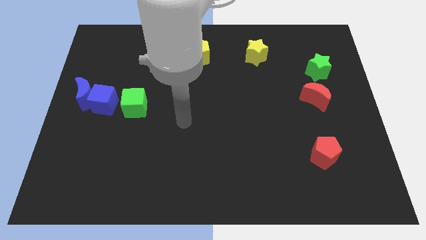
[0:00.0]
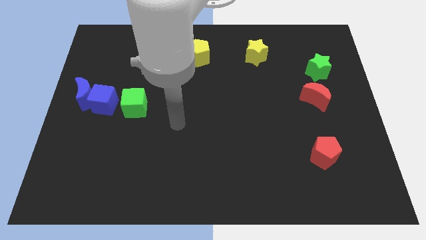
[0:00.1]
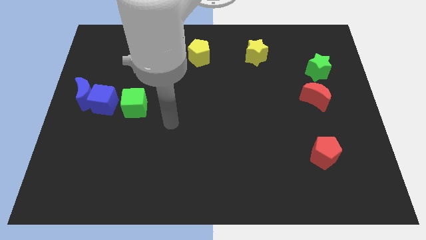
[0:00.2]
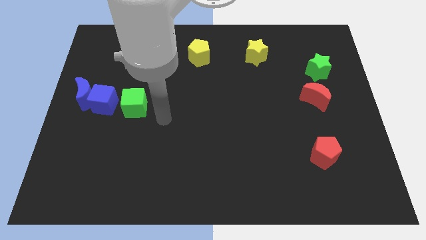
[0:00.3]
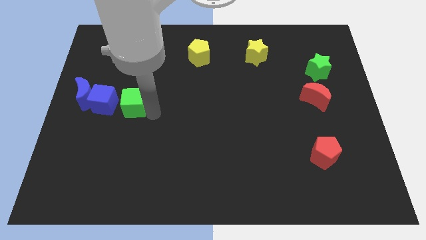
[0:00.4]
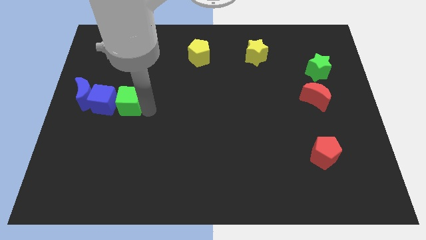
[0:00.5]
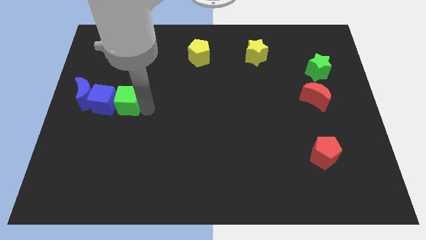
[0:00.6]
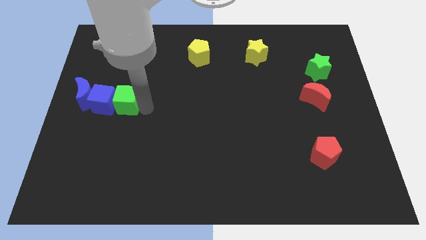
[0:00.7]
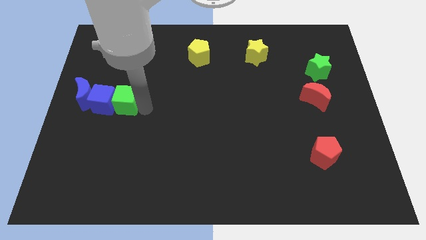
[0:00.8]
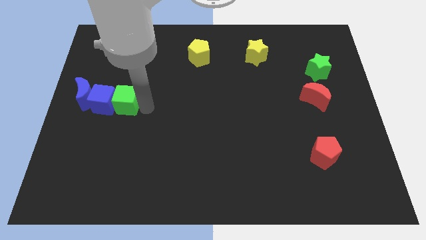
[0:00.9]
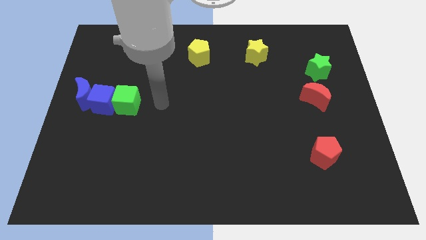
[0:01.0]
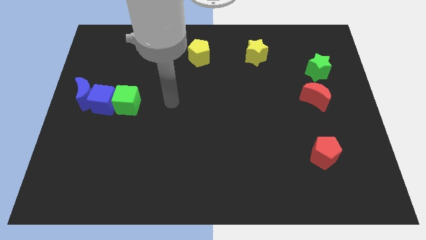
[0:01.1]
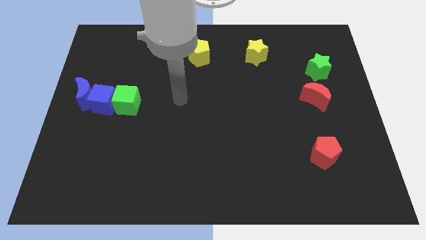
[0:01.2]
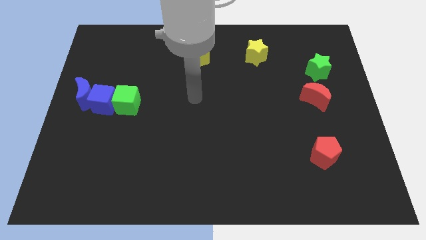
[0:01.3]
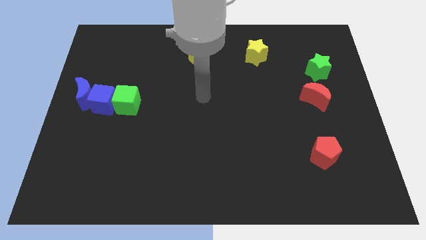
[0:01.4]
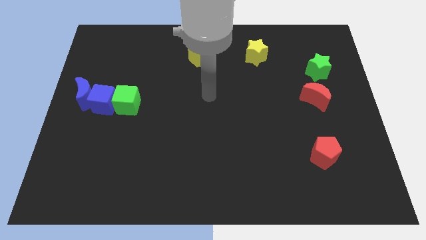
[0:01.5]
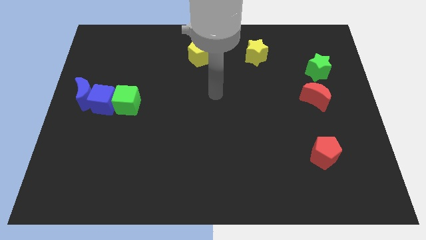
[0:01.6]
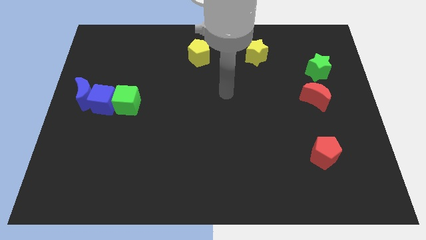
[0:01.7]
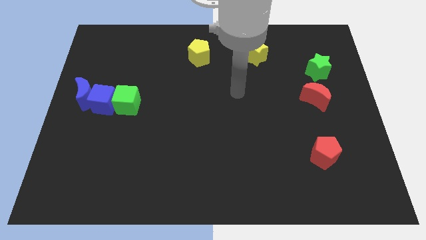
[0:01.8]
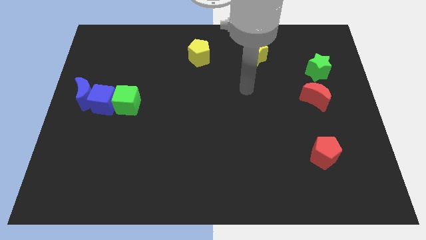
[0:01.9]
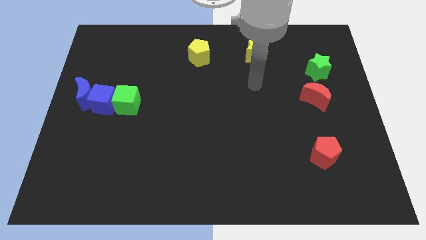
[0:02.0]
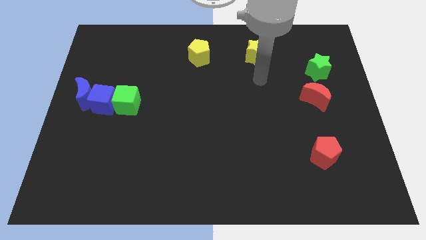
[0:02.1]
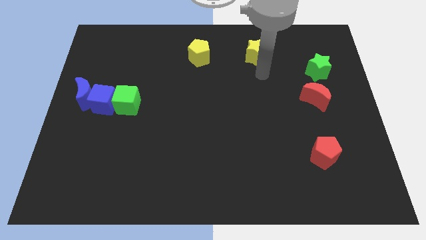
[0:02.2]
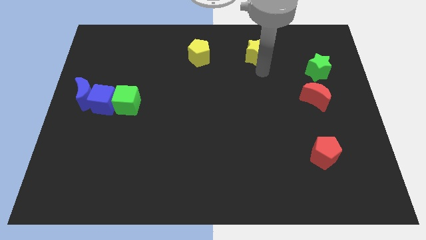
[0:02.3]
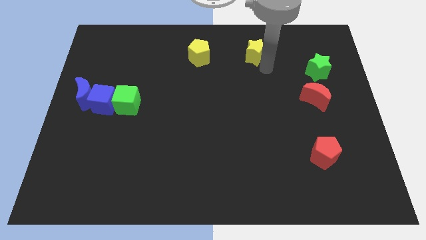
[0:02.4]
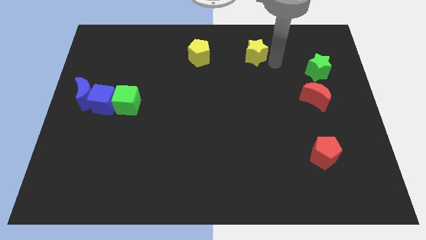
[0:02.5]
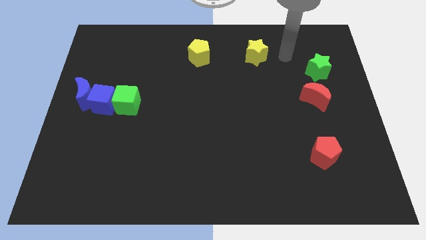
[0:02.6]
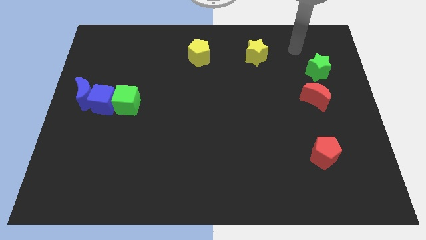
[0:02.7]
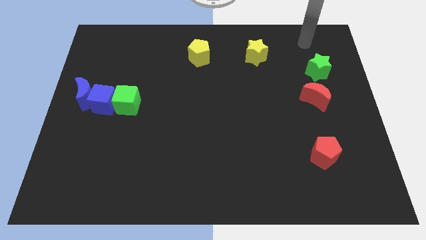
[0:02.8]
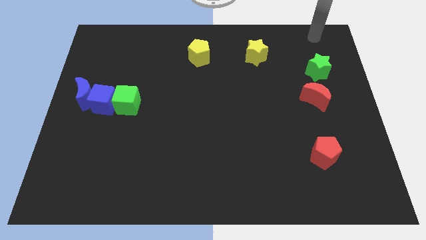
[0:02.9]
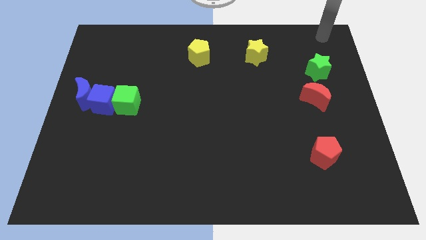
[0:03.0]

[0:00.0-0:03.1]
push green cube into blue cube

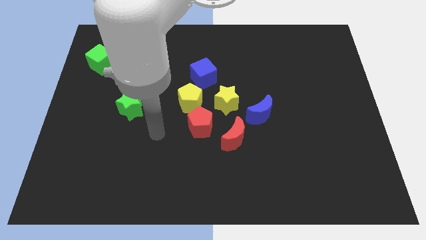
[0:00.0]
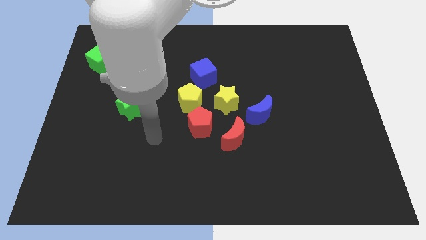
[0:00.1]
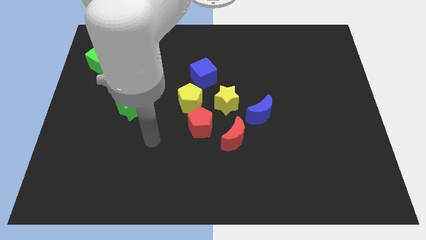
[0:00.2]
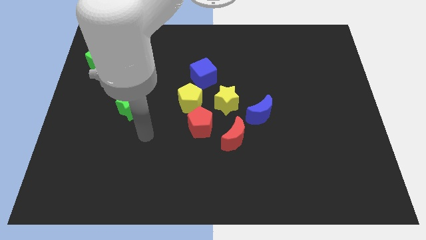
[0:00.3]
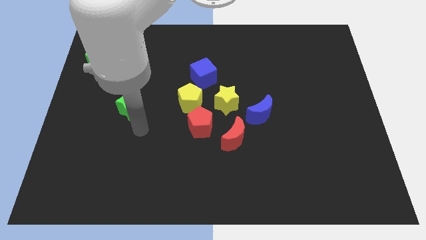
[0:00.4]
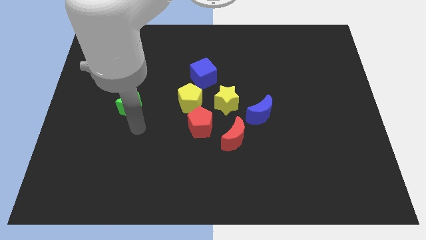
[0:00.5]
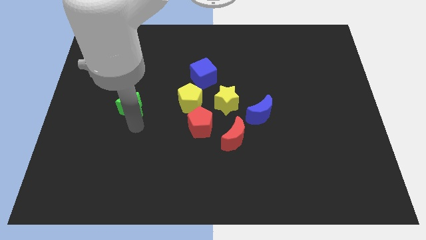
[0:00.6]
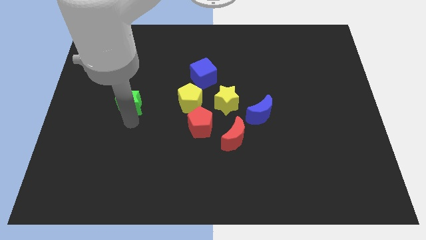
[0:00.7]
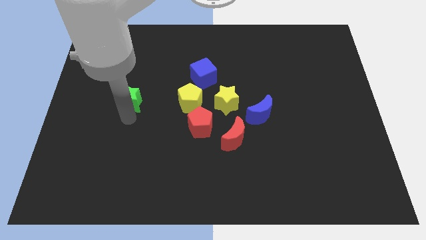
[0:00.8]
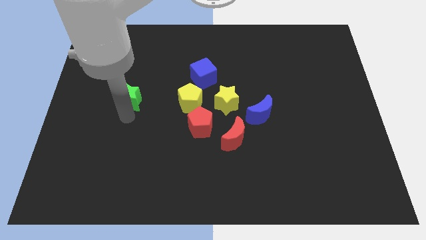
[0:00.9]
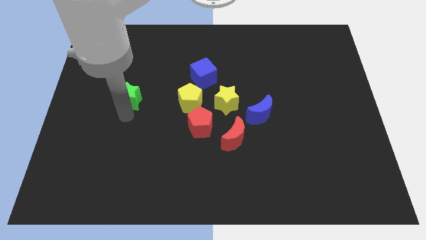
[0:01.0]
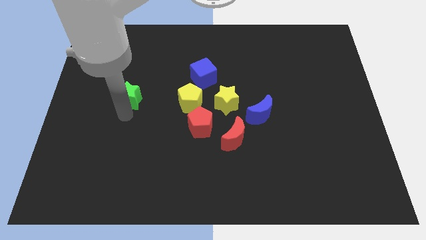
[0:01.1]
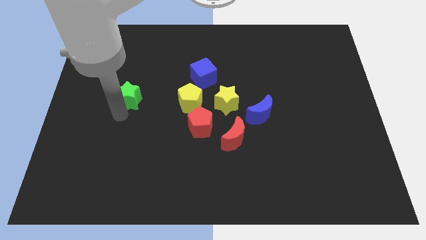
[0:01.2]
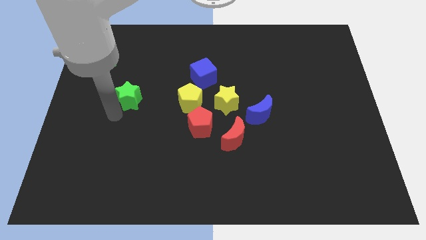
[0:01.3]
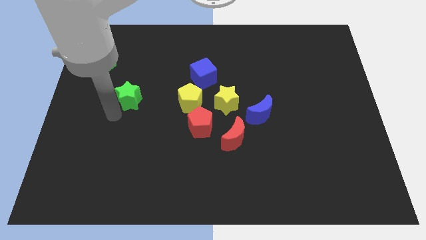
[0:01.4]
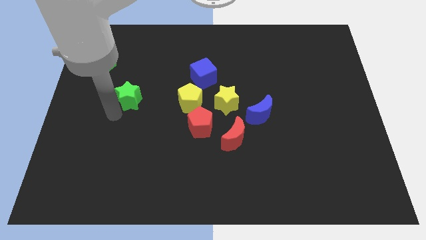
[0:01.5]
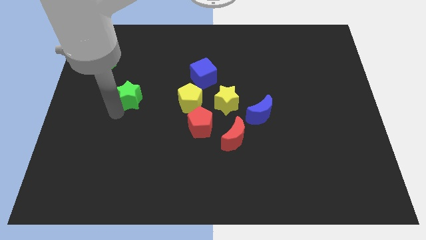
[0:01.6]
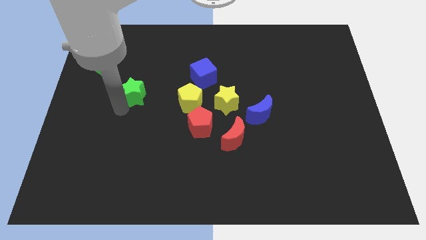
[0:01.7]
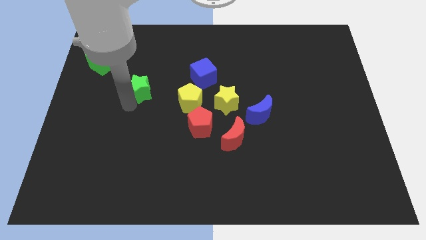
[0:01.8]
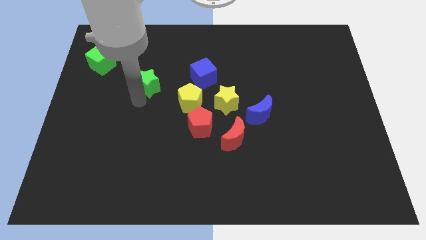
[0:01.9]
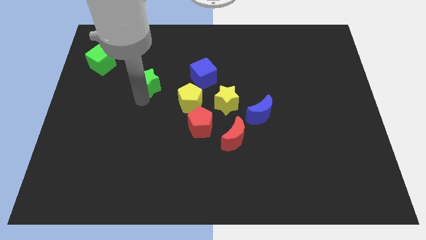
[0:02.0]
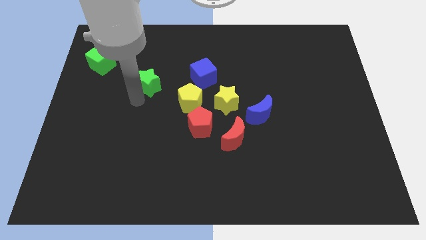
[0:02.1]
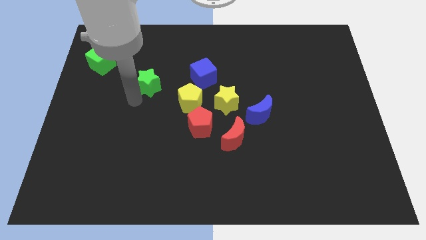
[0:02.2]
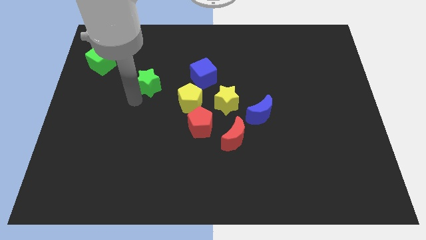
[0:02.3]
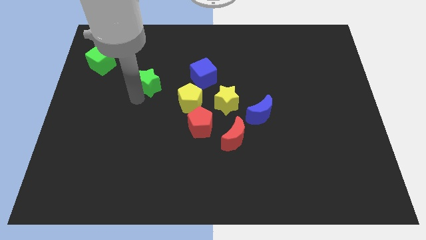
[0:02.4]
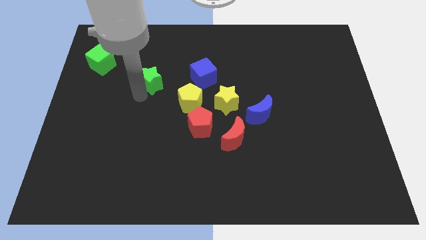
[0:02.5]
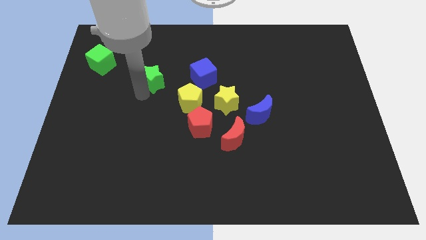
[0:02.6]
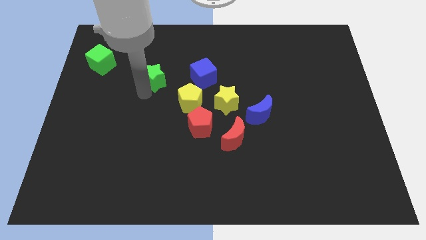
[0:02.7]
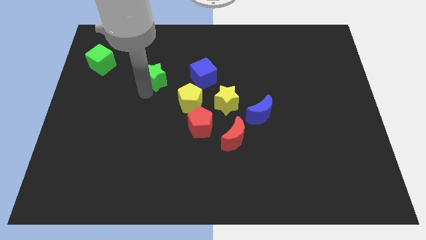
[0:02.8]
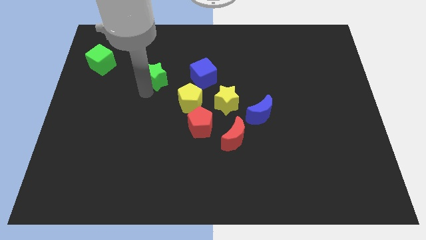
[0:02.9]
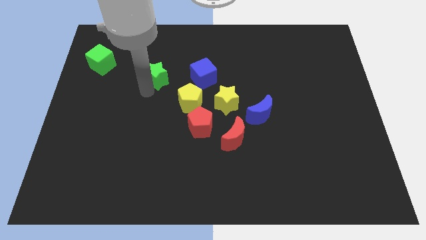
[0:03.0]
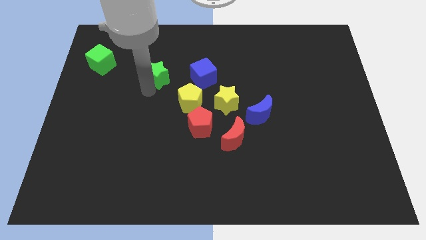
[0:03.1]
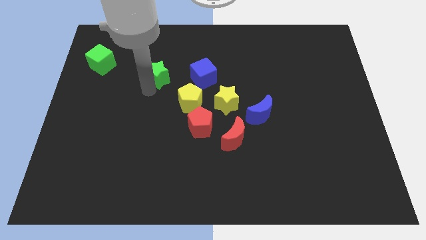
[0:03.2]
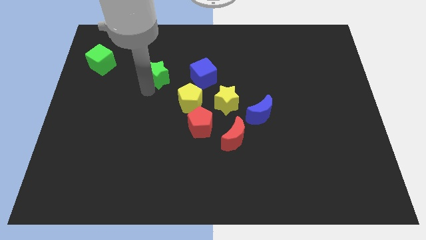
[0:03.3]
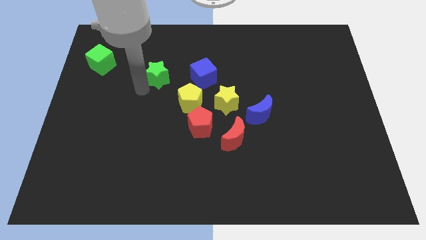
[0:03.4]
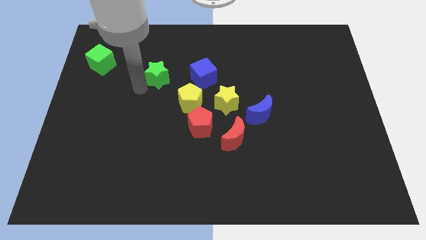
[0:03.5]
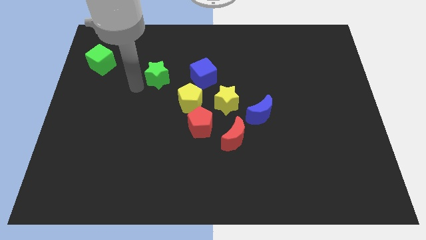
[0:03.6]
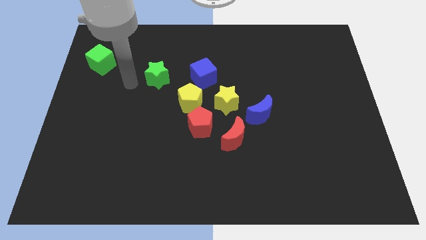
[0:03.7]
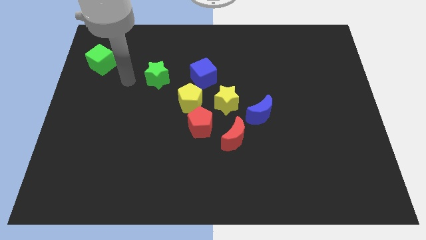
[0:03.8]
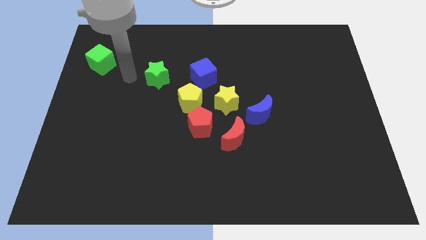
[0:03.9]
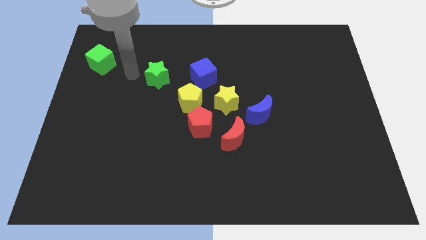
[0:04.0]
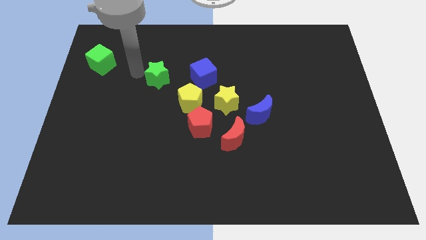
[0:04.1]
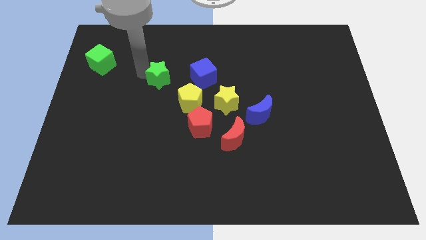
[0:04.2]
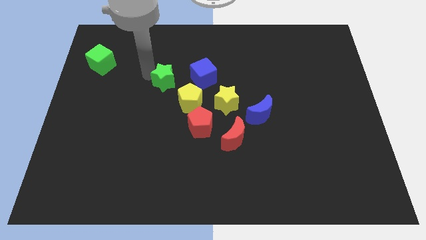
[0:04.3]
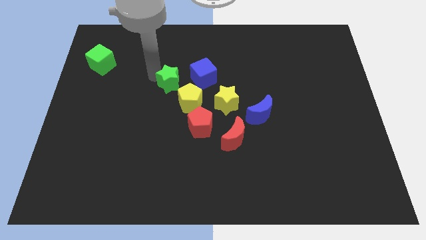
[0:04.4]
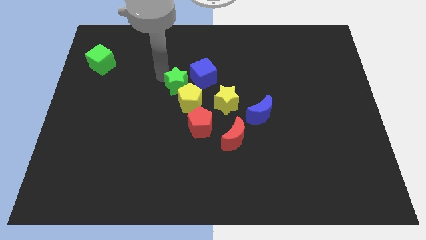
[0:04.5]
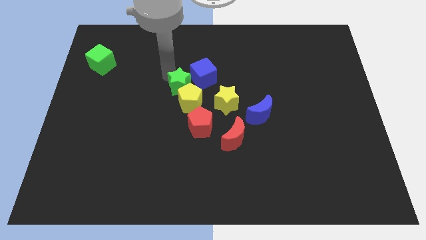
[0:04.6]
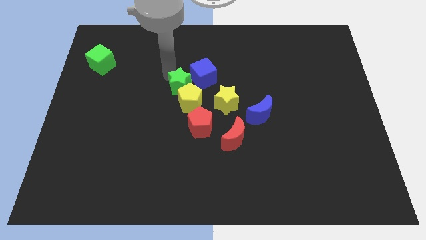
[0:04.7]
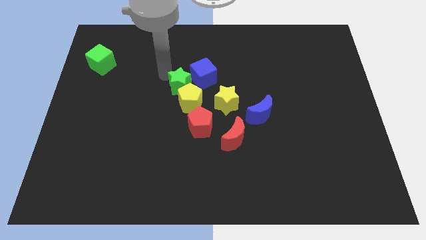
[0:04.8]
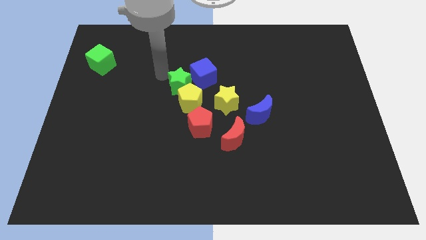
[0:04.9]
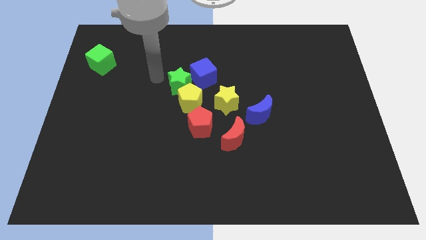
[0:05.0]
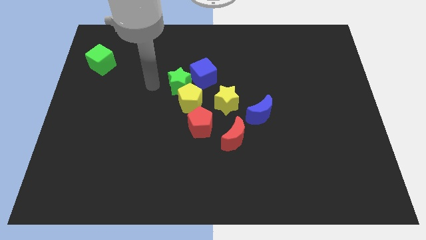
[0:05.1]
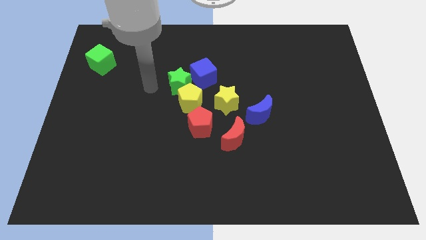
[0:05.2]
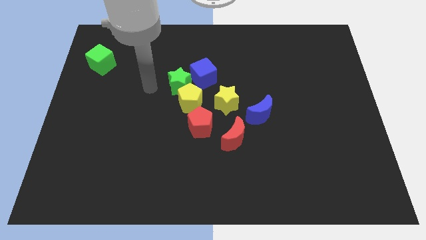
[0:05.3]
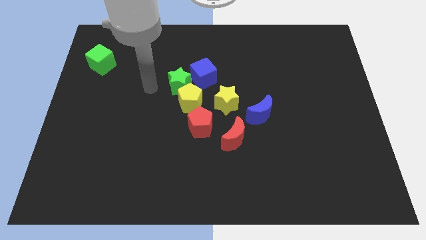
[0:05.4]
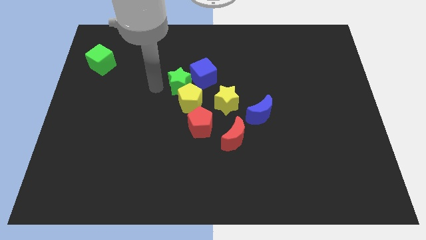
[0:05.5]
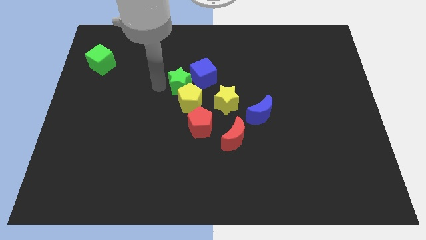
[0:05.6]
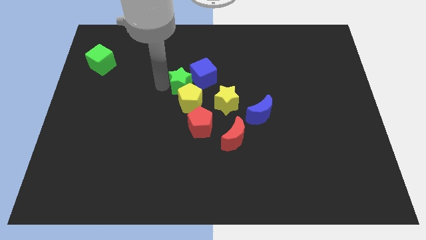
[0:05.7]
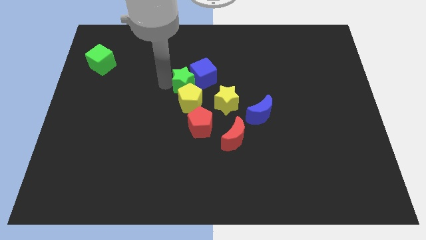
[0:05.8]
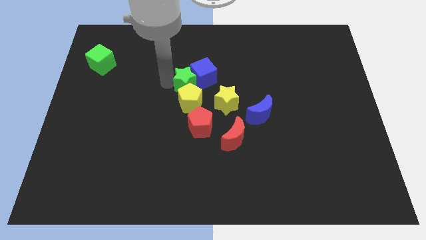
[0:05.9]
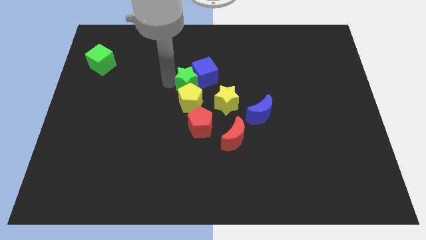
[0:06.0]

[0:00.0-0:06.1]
place the green star on top of yellow pentagon
